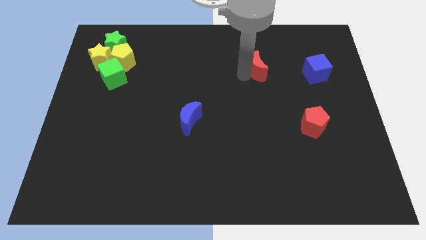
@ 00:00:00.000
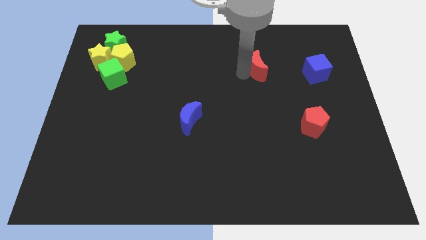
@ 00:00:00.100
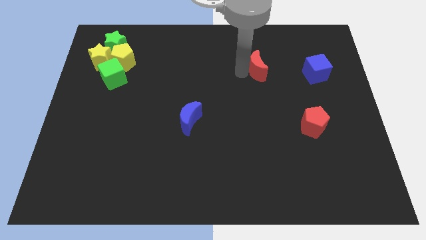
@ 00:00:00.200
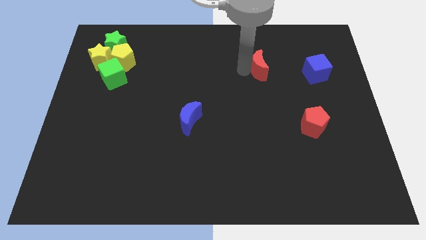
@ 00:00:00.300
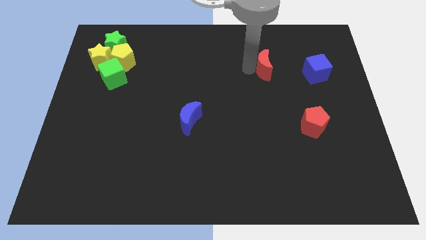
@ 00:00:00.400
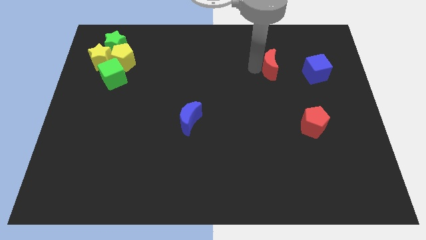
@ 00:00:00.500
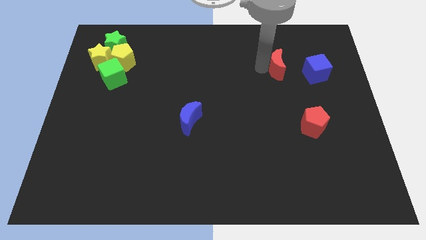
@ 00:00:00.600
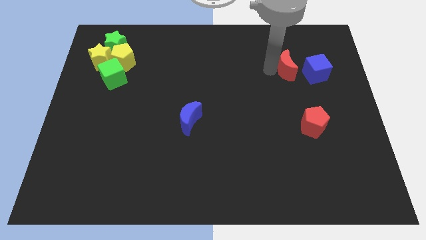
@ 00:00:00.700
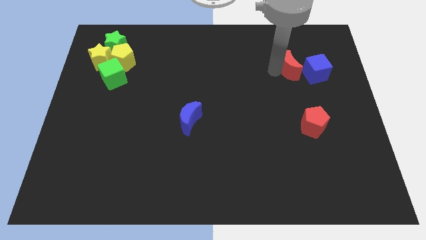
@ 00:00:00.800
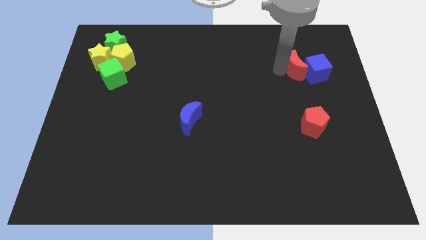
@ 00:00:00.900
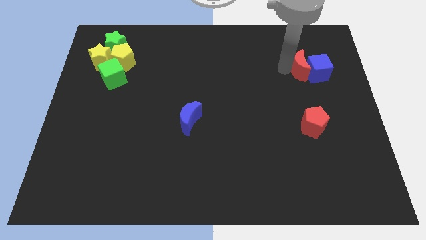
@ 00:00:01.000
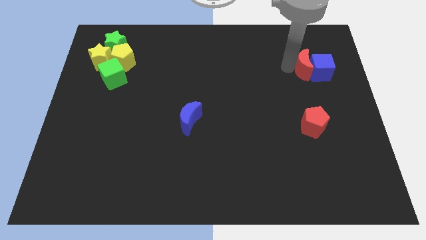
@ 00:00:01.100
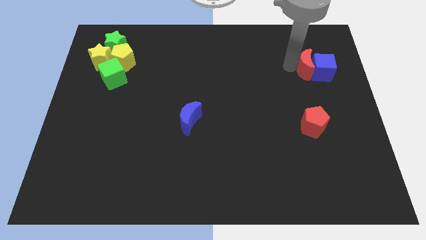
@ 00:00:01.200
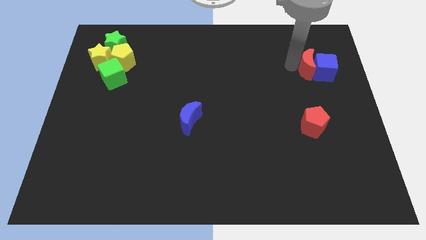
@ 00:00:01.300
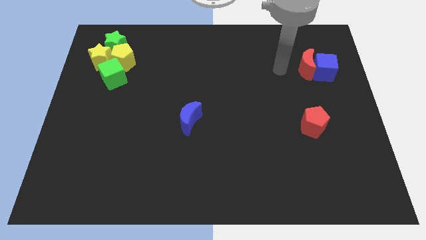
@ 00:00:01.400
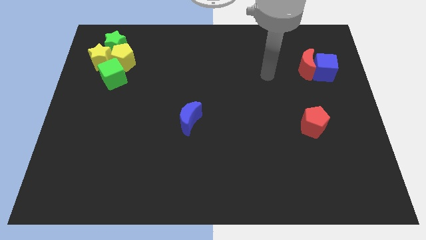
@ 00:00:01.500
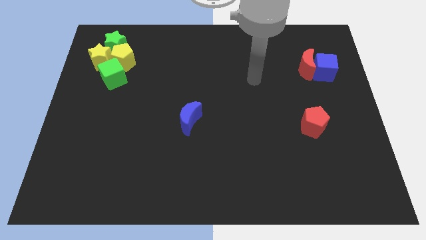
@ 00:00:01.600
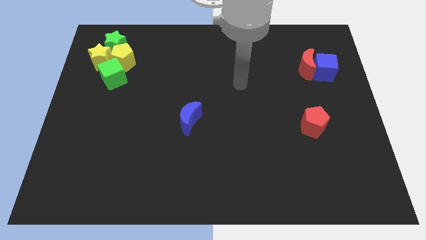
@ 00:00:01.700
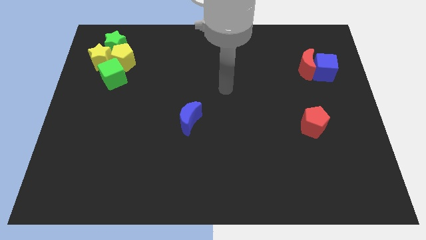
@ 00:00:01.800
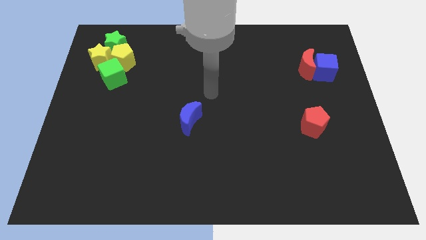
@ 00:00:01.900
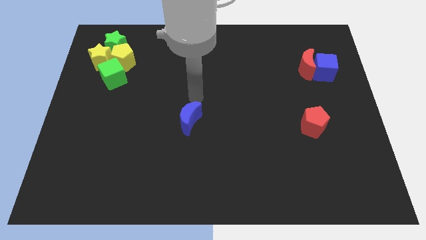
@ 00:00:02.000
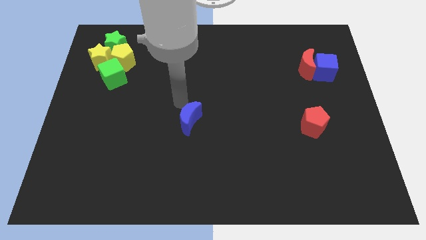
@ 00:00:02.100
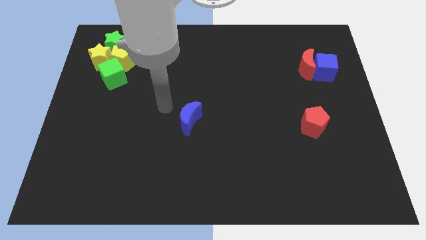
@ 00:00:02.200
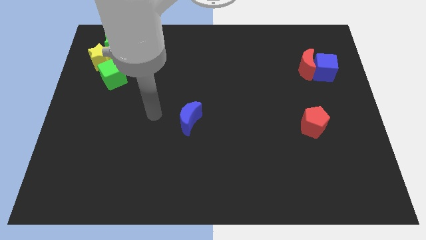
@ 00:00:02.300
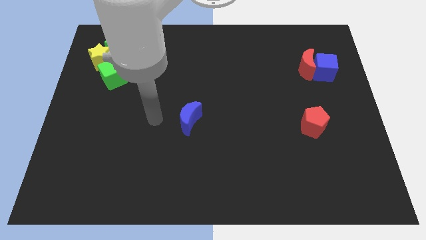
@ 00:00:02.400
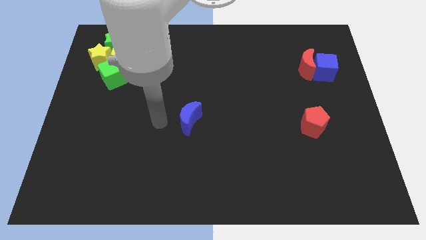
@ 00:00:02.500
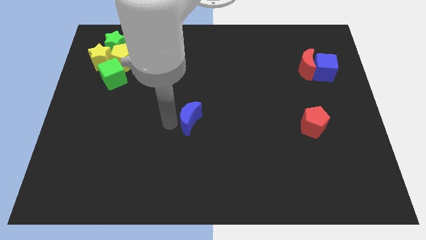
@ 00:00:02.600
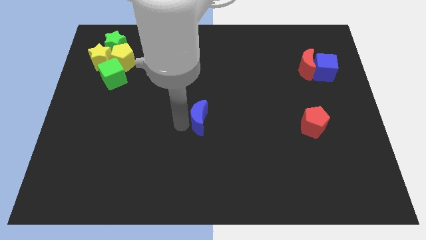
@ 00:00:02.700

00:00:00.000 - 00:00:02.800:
push the red moon to the left of blue cube

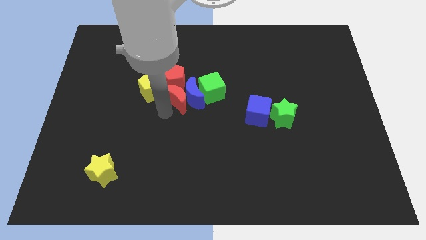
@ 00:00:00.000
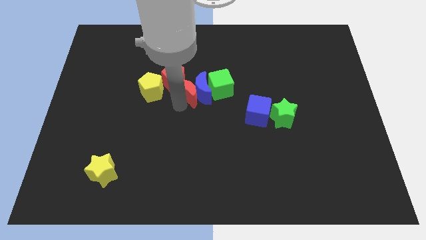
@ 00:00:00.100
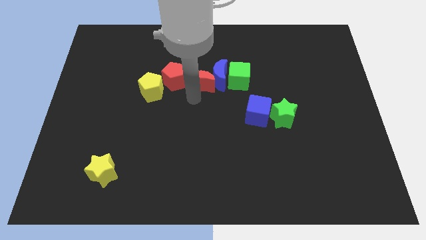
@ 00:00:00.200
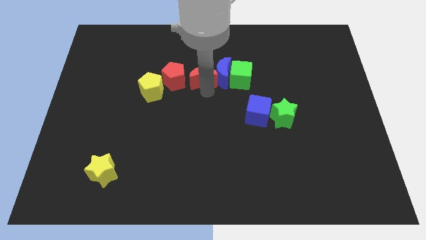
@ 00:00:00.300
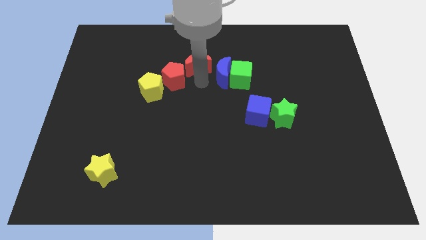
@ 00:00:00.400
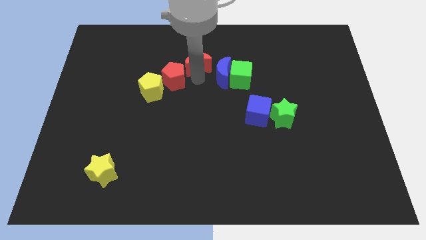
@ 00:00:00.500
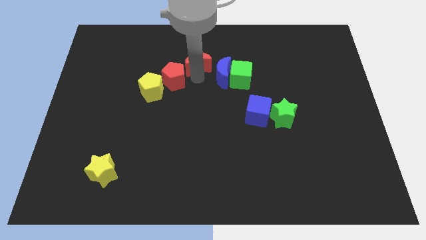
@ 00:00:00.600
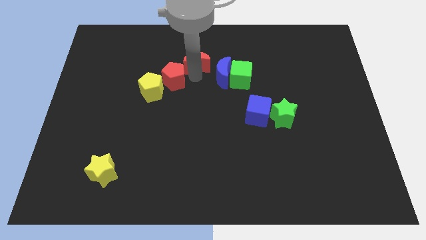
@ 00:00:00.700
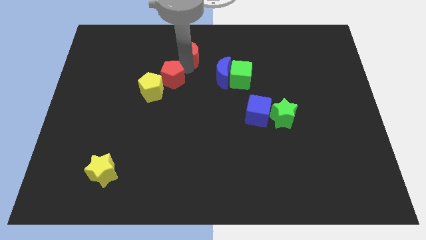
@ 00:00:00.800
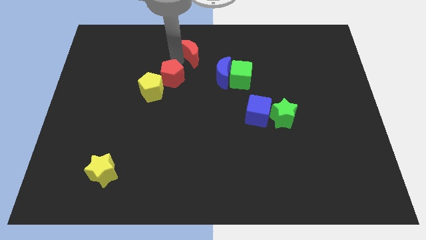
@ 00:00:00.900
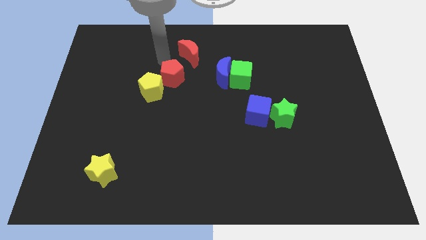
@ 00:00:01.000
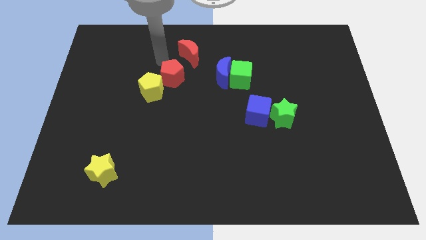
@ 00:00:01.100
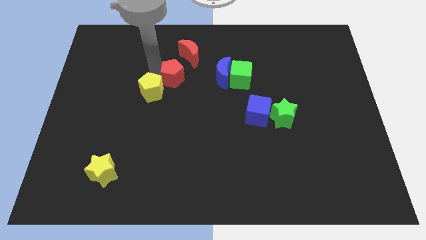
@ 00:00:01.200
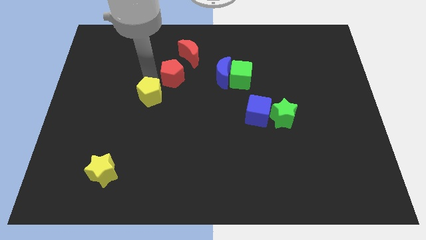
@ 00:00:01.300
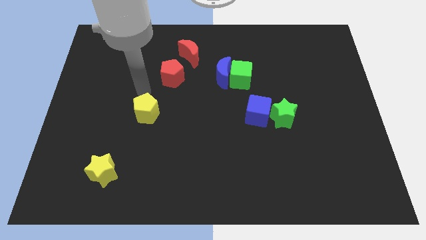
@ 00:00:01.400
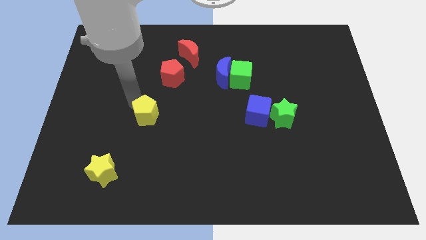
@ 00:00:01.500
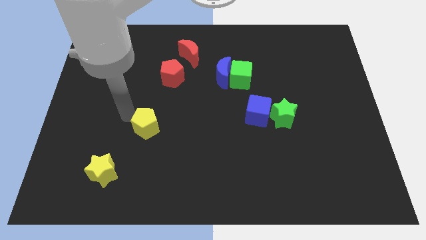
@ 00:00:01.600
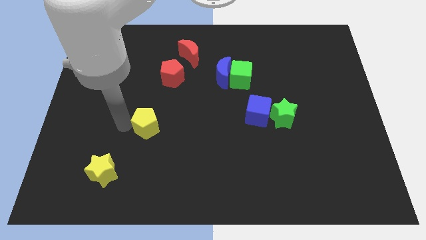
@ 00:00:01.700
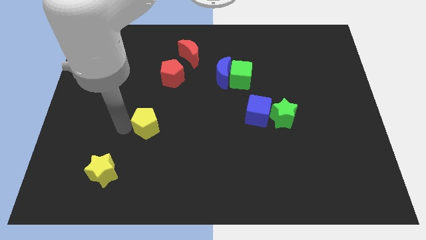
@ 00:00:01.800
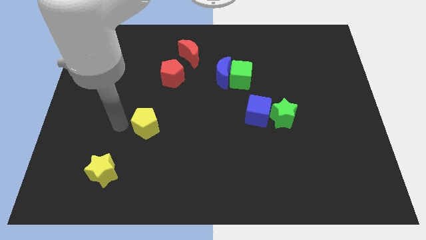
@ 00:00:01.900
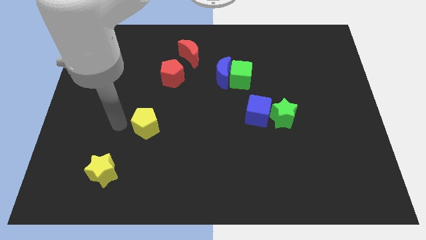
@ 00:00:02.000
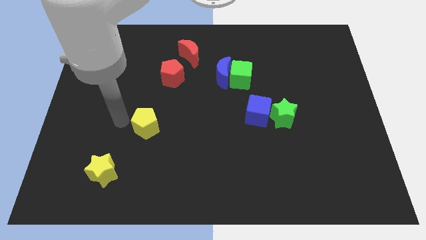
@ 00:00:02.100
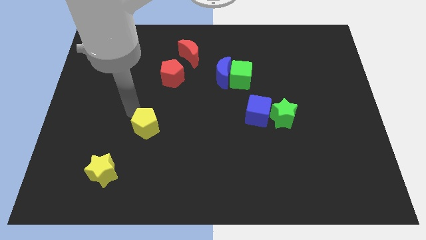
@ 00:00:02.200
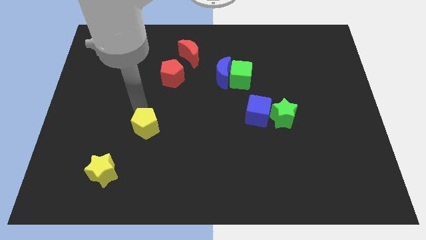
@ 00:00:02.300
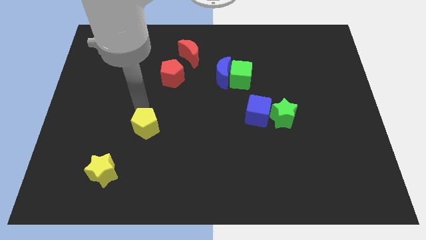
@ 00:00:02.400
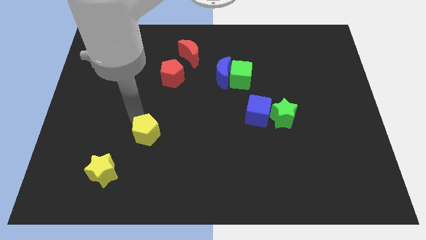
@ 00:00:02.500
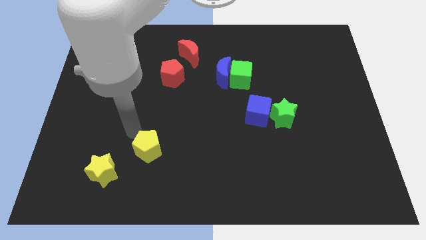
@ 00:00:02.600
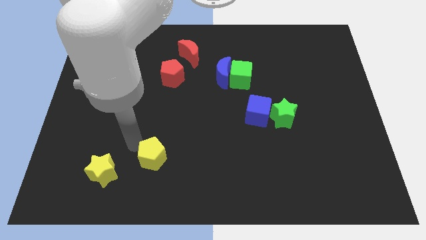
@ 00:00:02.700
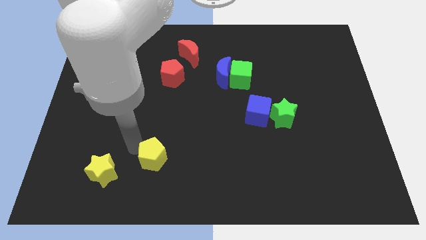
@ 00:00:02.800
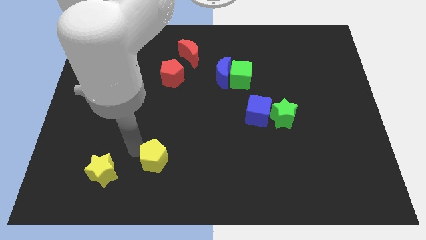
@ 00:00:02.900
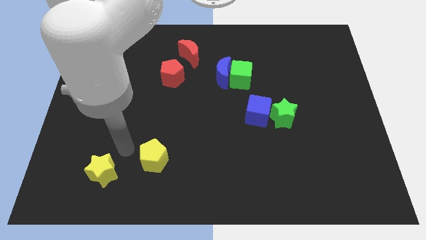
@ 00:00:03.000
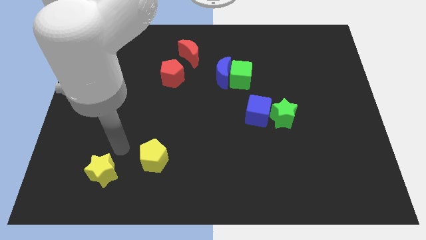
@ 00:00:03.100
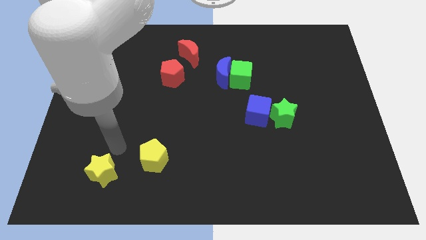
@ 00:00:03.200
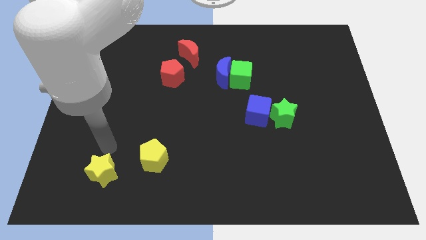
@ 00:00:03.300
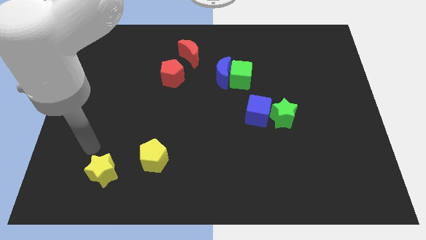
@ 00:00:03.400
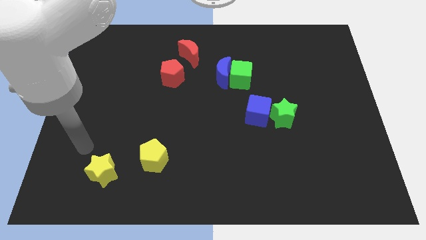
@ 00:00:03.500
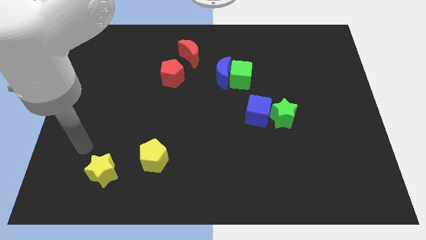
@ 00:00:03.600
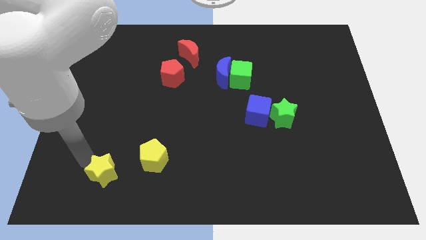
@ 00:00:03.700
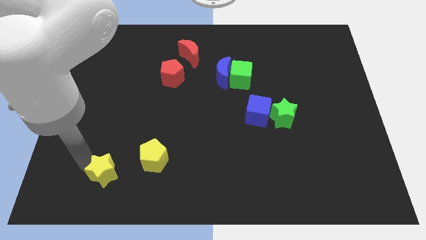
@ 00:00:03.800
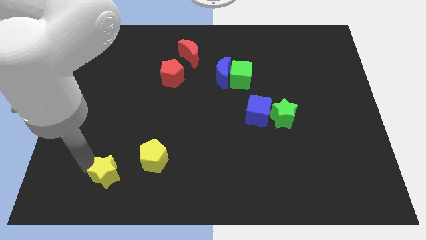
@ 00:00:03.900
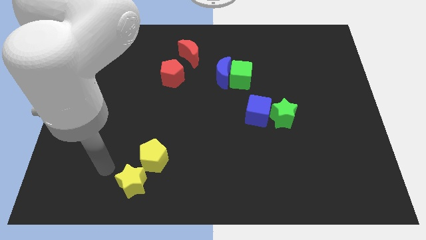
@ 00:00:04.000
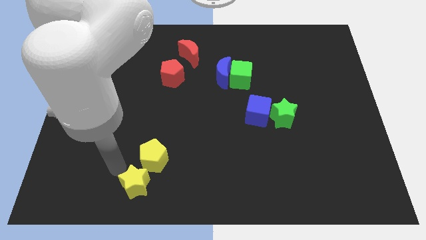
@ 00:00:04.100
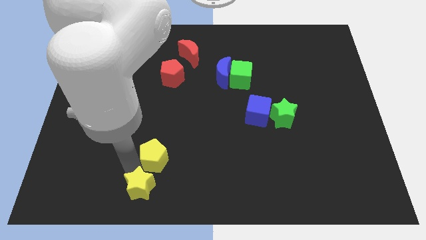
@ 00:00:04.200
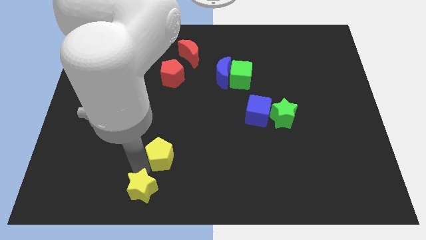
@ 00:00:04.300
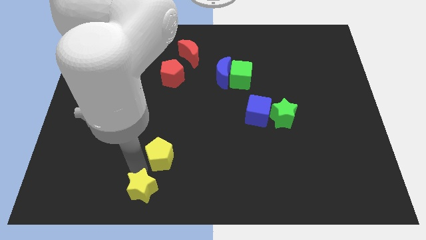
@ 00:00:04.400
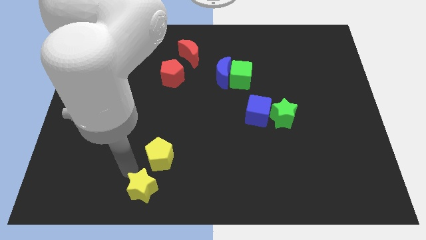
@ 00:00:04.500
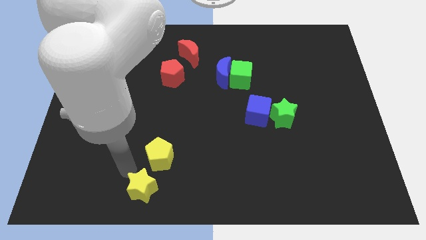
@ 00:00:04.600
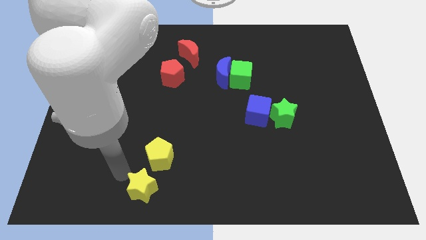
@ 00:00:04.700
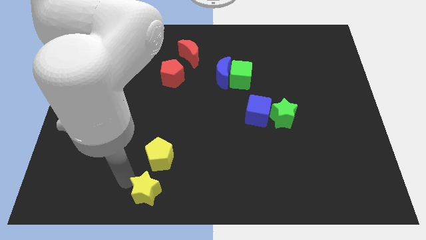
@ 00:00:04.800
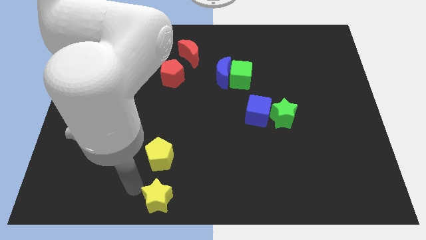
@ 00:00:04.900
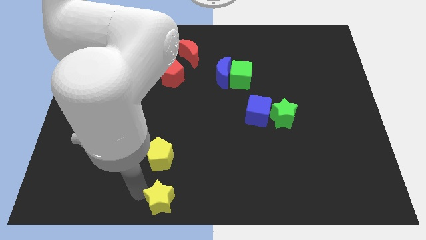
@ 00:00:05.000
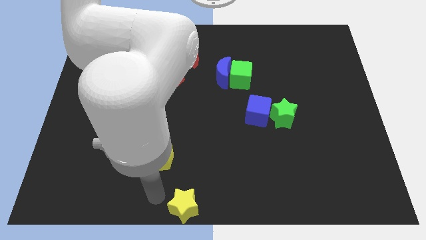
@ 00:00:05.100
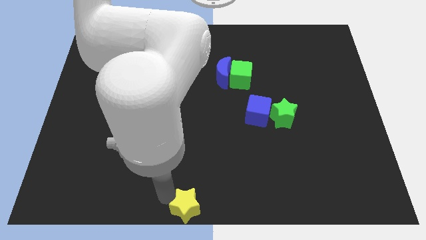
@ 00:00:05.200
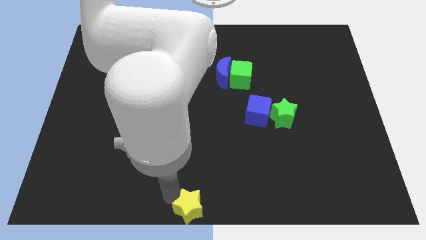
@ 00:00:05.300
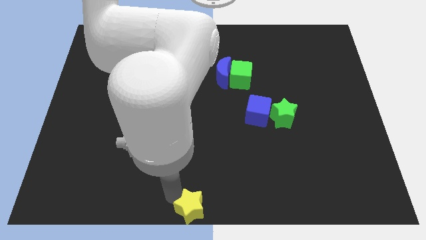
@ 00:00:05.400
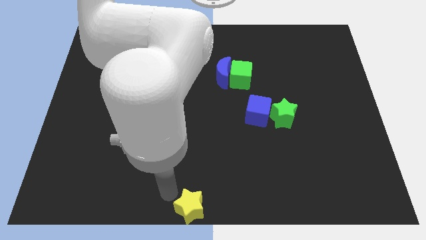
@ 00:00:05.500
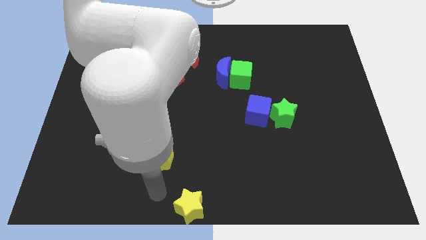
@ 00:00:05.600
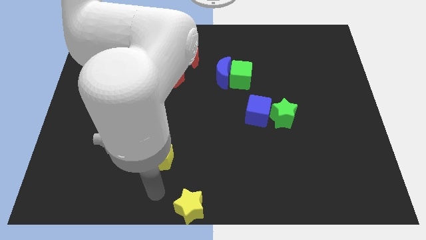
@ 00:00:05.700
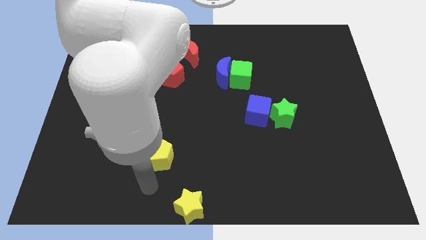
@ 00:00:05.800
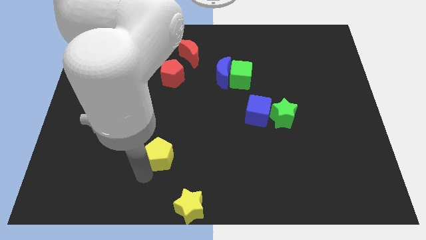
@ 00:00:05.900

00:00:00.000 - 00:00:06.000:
place the yellow star and yellow pentagon diagonally
